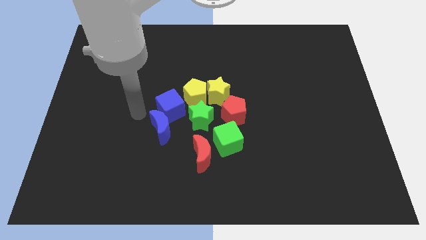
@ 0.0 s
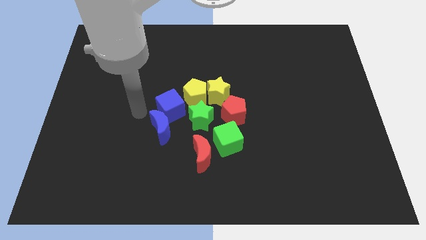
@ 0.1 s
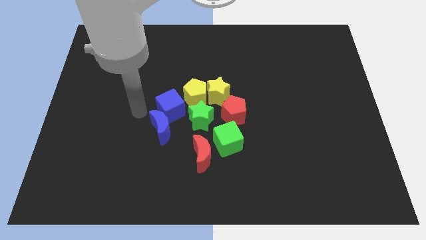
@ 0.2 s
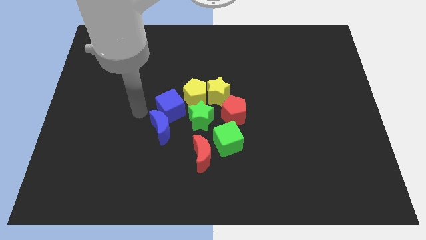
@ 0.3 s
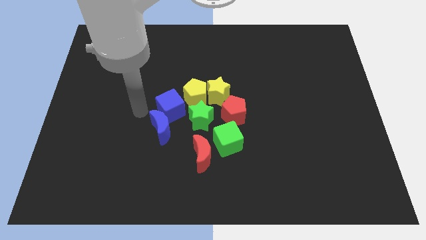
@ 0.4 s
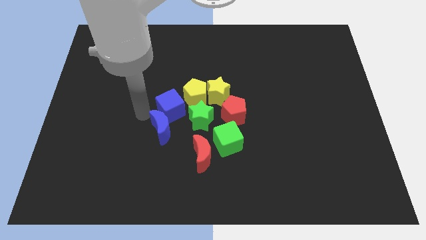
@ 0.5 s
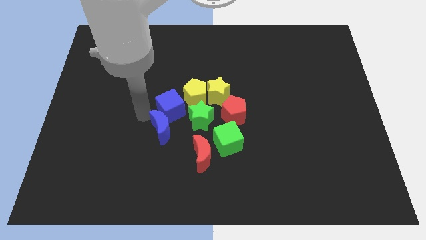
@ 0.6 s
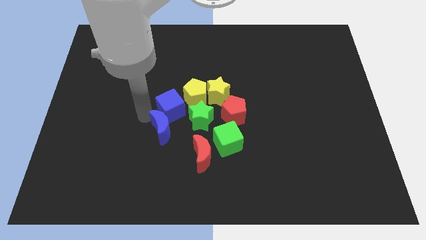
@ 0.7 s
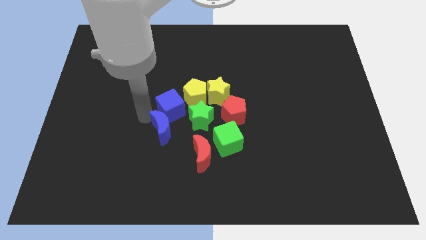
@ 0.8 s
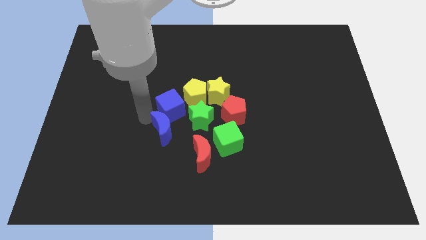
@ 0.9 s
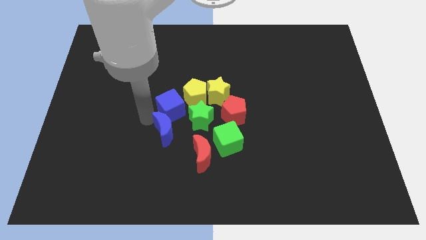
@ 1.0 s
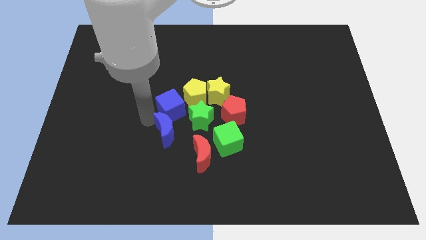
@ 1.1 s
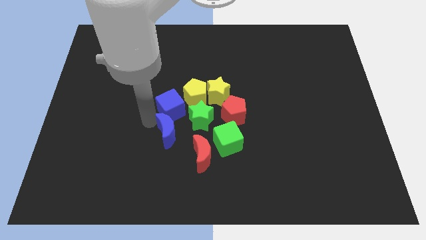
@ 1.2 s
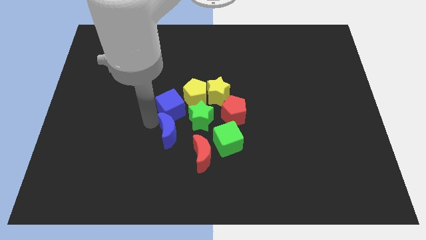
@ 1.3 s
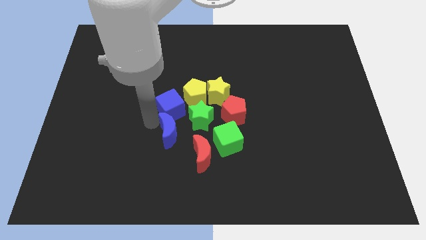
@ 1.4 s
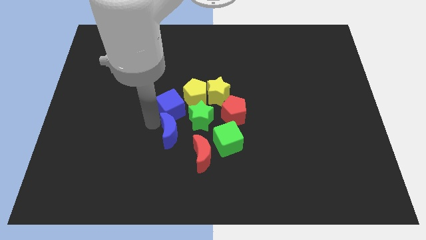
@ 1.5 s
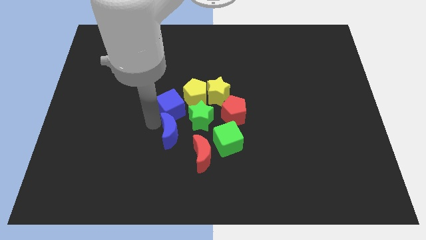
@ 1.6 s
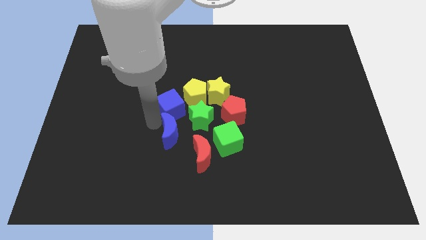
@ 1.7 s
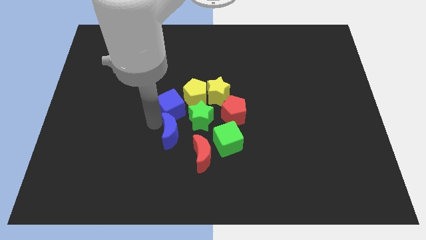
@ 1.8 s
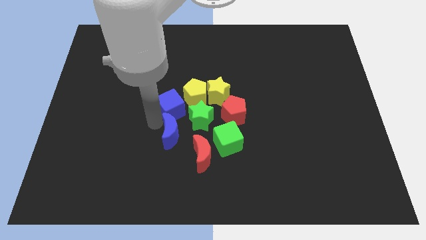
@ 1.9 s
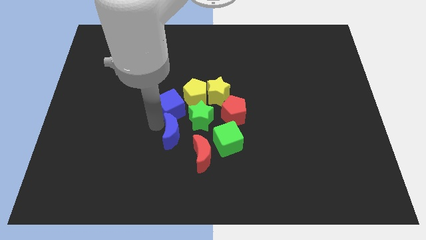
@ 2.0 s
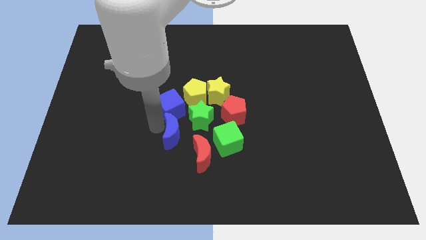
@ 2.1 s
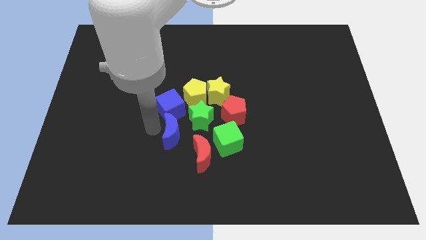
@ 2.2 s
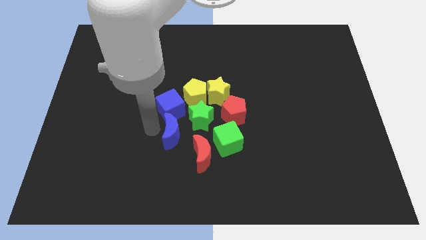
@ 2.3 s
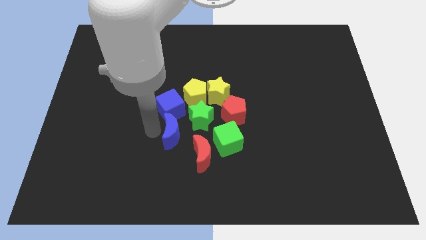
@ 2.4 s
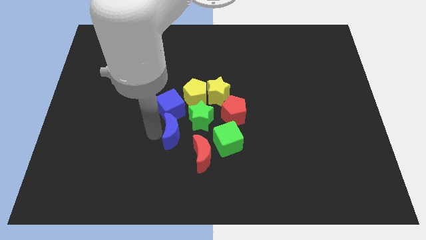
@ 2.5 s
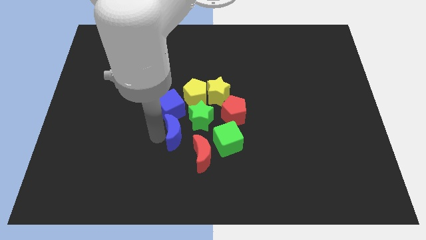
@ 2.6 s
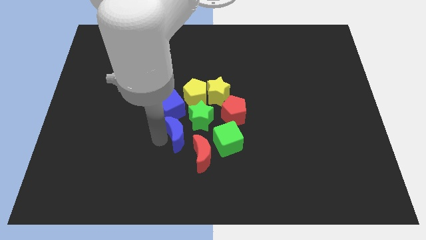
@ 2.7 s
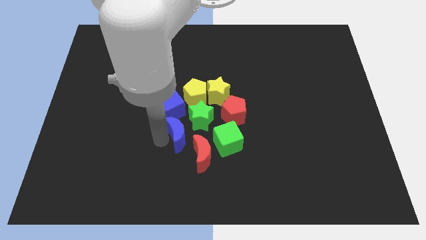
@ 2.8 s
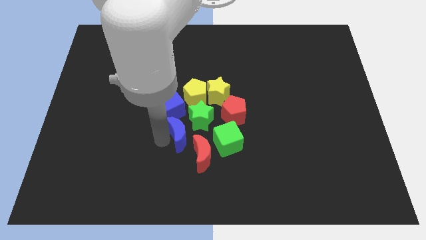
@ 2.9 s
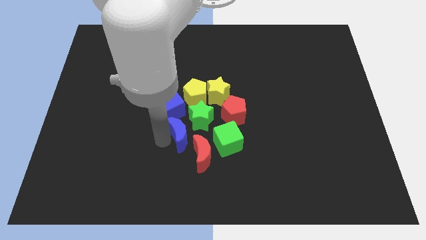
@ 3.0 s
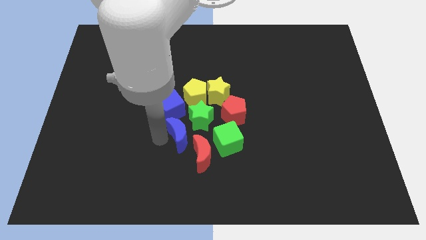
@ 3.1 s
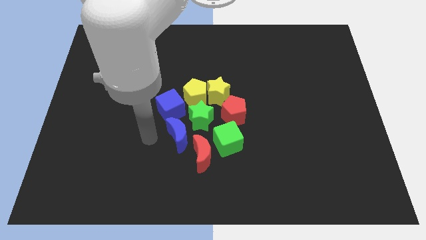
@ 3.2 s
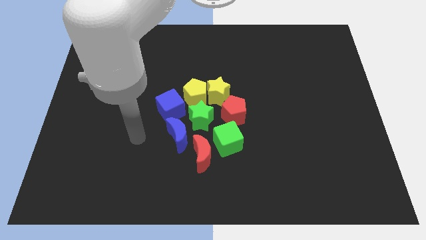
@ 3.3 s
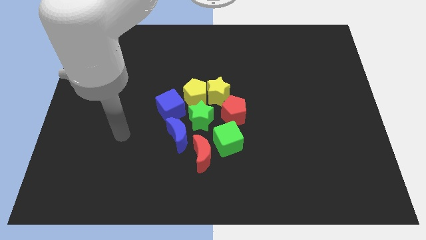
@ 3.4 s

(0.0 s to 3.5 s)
push the blue moon close to the green star

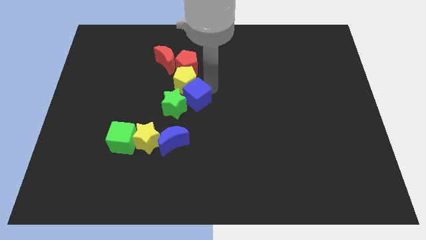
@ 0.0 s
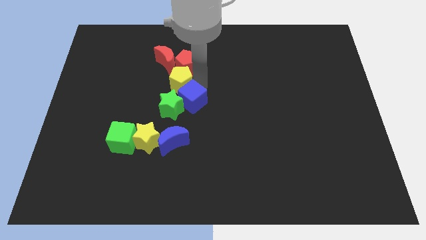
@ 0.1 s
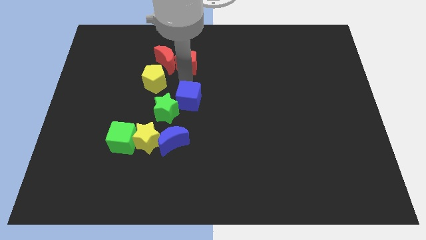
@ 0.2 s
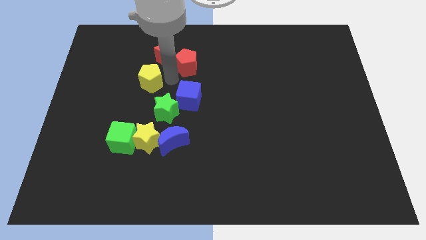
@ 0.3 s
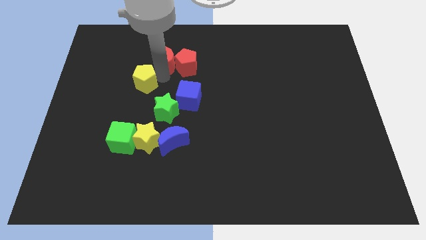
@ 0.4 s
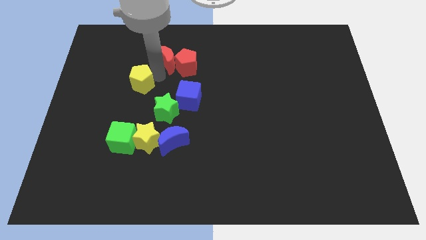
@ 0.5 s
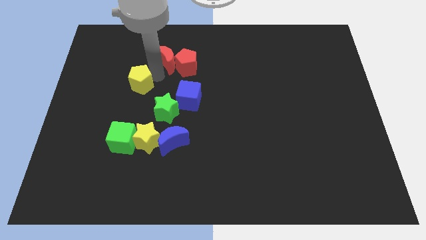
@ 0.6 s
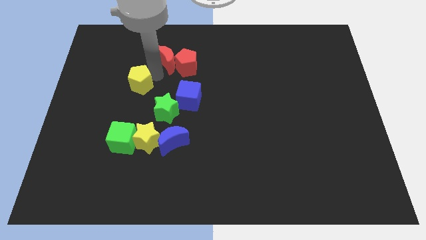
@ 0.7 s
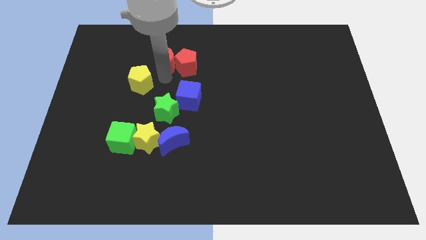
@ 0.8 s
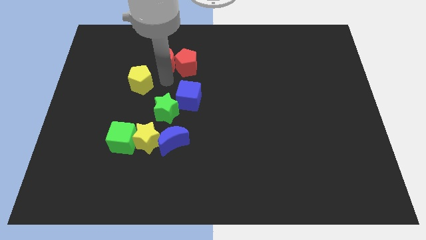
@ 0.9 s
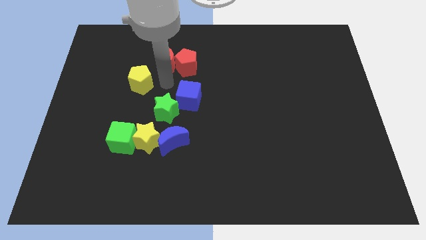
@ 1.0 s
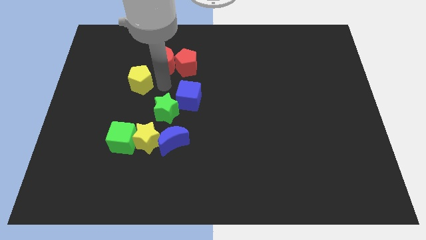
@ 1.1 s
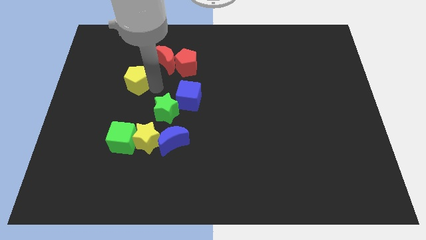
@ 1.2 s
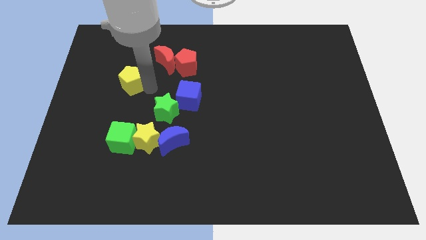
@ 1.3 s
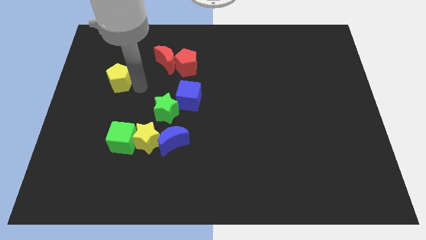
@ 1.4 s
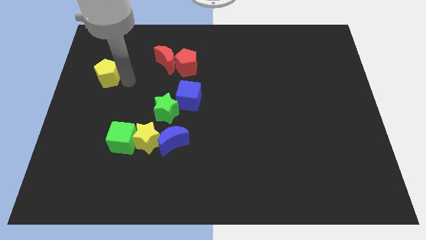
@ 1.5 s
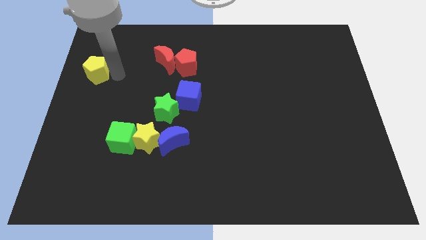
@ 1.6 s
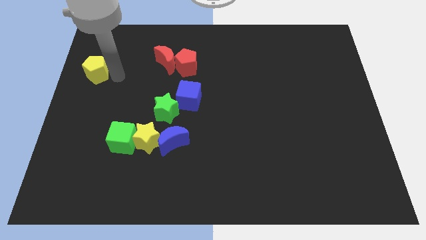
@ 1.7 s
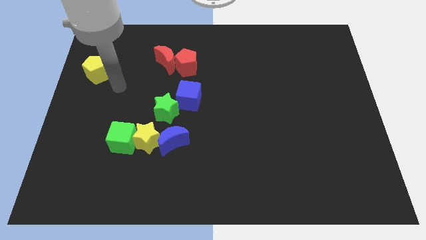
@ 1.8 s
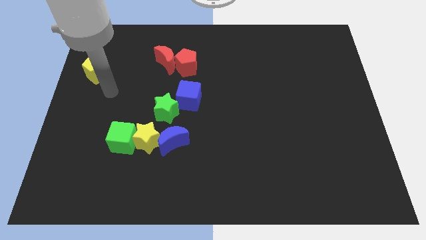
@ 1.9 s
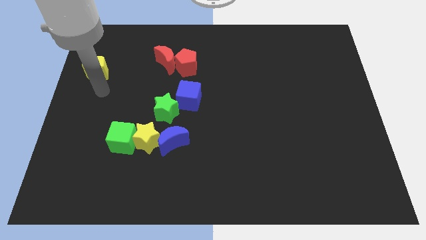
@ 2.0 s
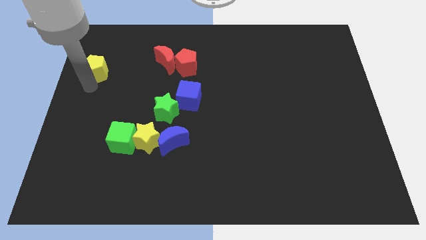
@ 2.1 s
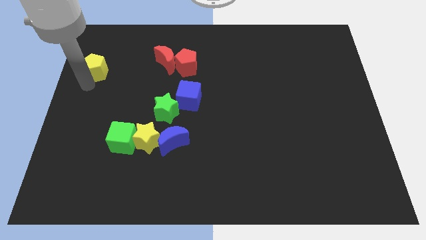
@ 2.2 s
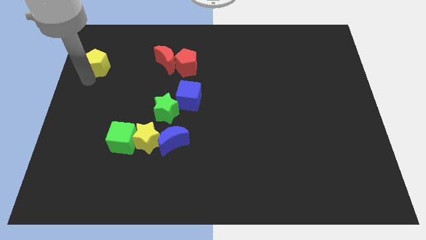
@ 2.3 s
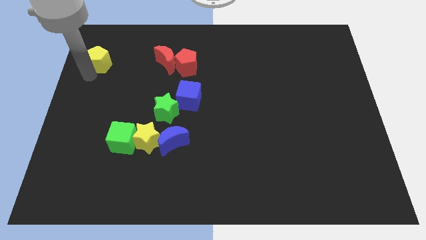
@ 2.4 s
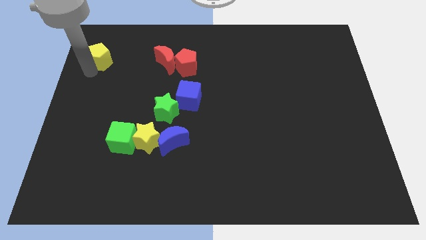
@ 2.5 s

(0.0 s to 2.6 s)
push the yellow pentagon to the left of the red crescent

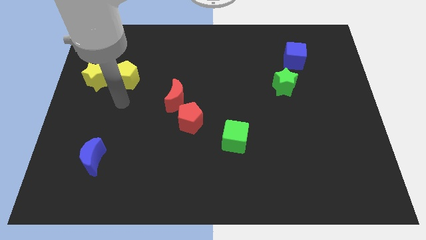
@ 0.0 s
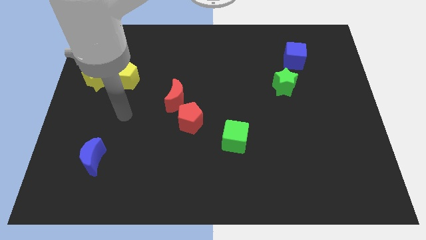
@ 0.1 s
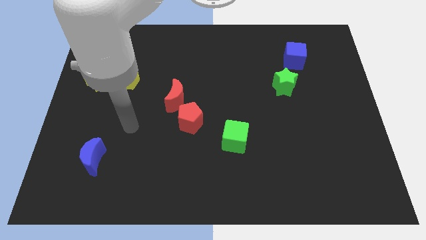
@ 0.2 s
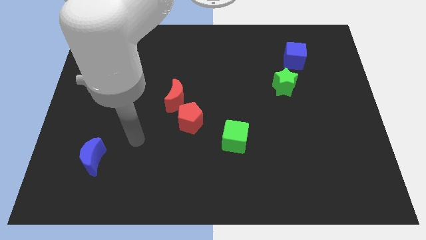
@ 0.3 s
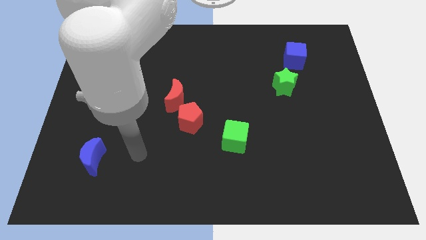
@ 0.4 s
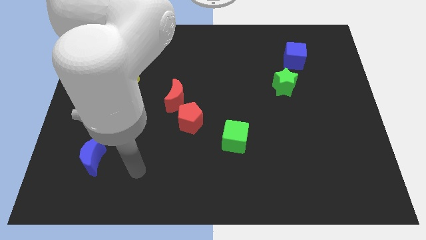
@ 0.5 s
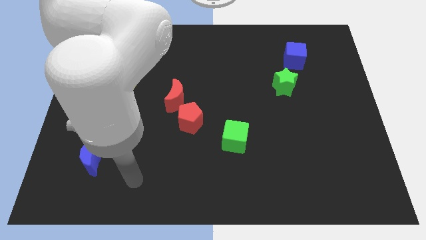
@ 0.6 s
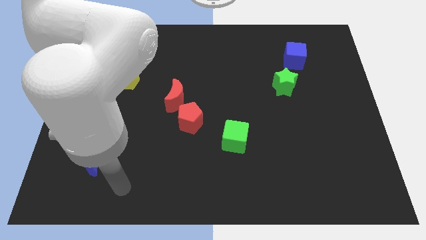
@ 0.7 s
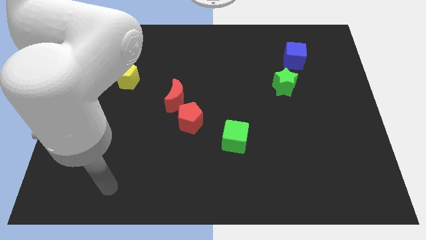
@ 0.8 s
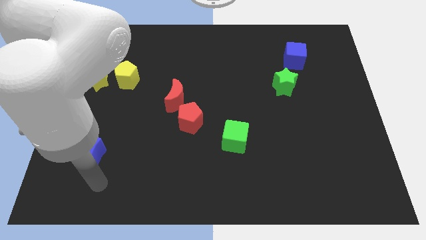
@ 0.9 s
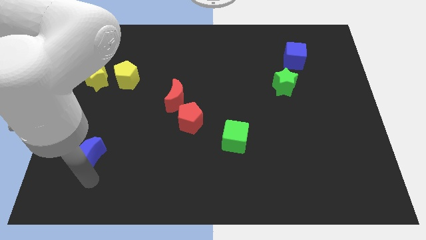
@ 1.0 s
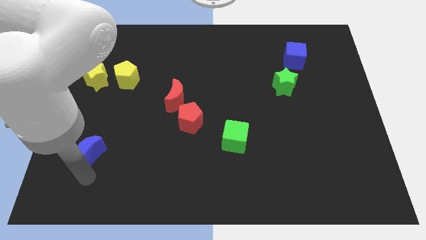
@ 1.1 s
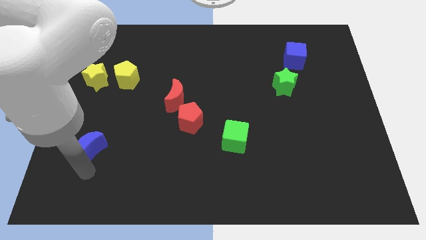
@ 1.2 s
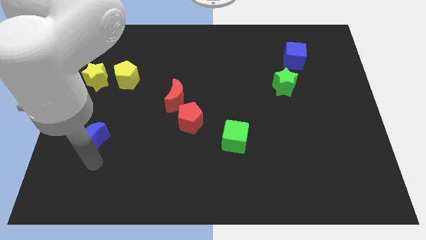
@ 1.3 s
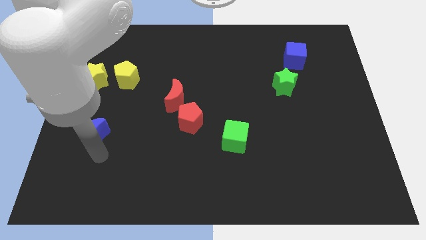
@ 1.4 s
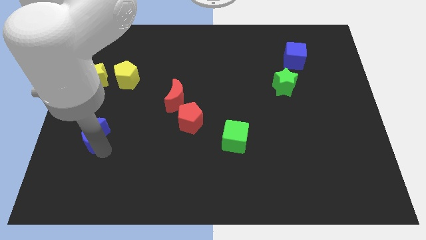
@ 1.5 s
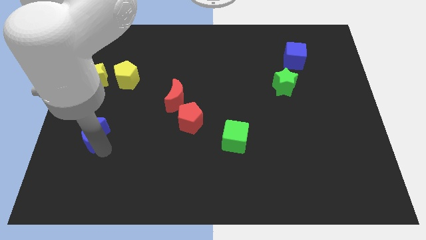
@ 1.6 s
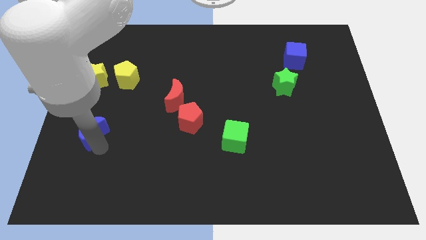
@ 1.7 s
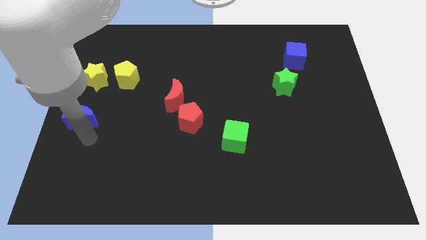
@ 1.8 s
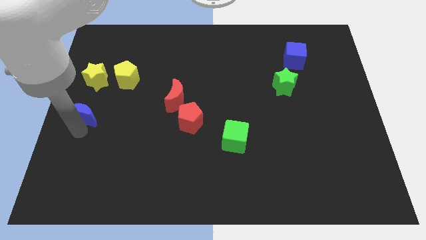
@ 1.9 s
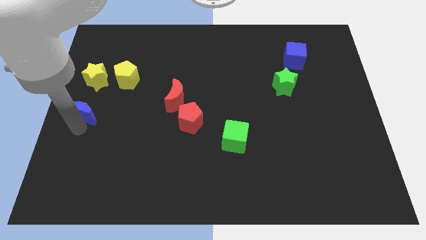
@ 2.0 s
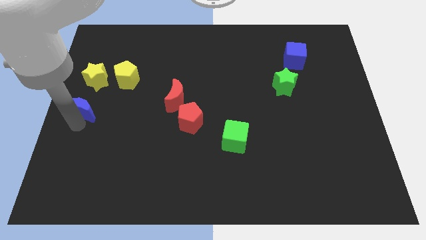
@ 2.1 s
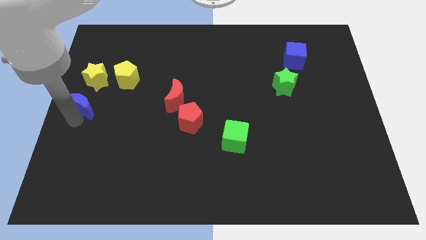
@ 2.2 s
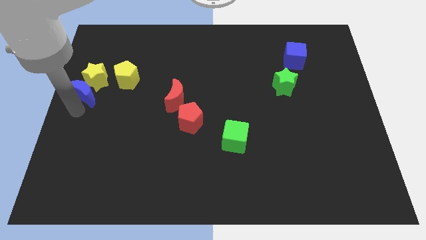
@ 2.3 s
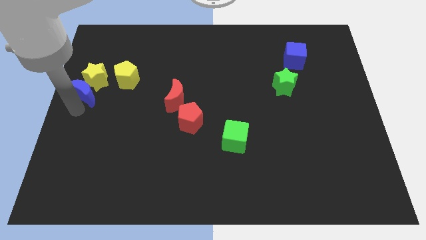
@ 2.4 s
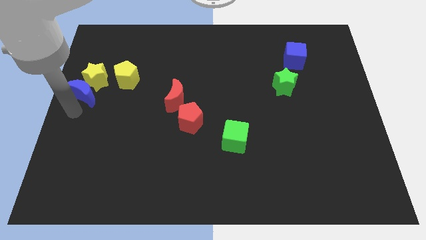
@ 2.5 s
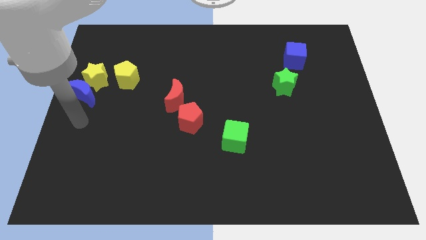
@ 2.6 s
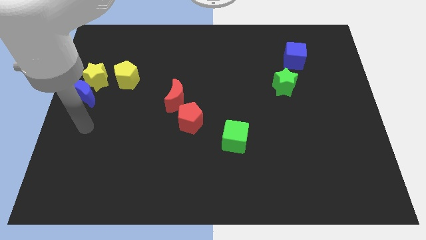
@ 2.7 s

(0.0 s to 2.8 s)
put the blue moon at the bottom left of the yellow star
